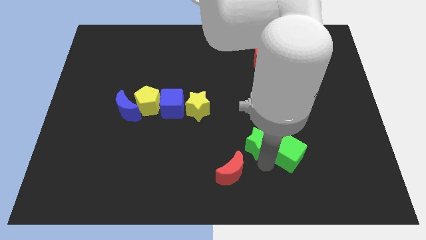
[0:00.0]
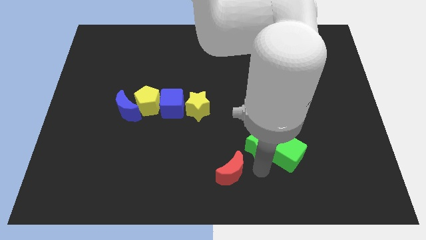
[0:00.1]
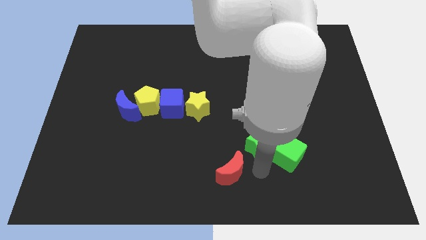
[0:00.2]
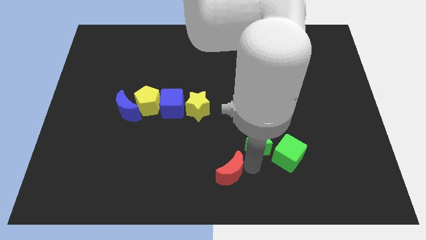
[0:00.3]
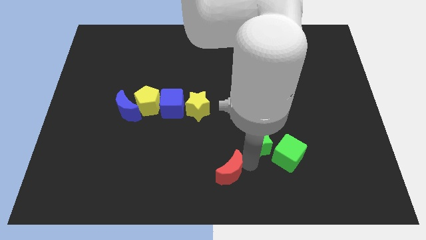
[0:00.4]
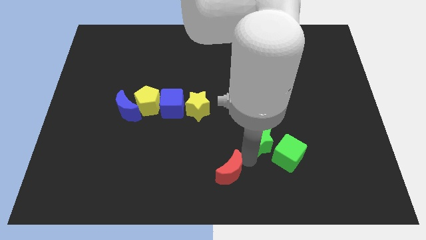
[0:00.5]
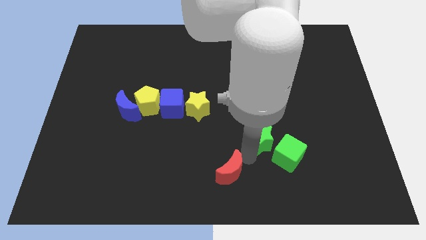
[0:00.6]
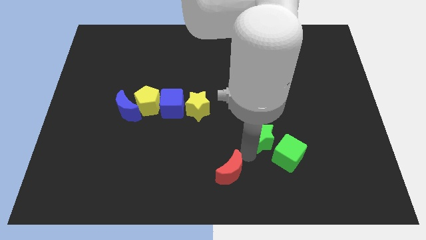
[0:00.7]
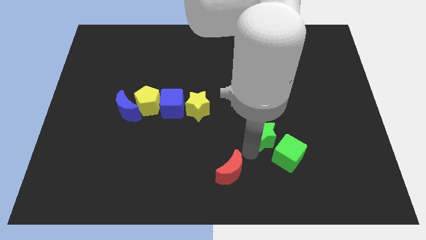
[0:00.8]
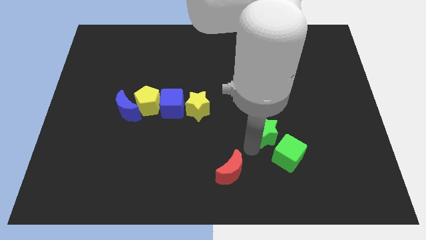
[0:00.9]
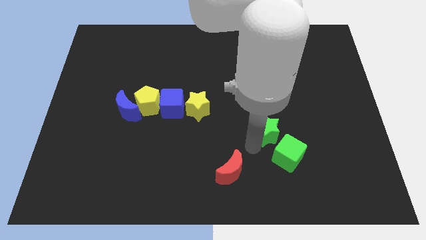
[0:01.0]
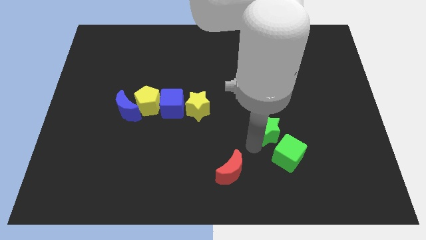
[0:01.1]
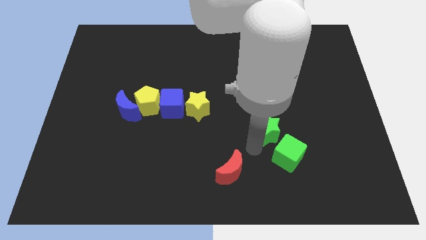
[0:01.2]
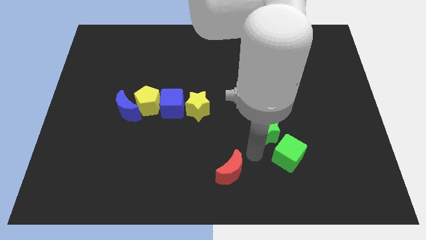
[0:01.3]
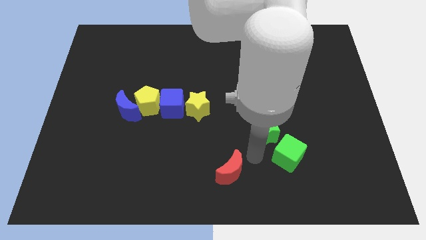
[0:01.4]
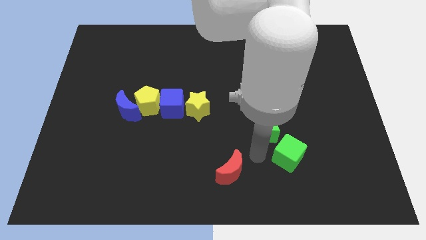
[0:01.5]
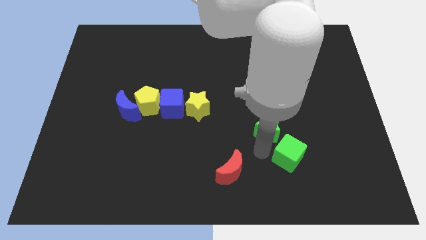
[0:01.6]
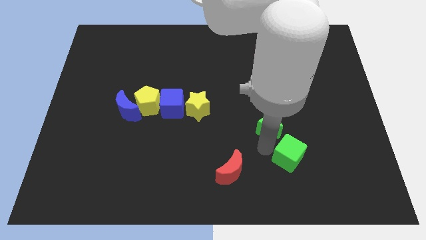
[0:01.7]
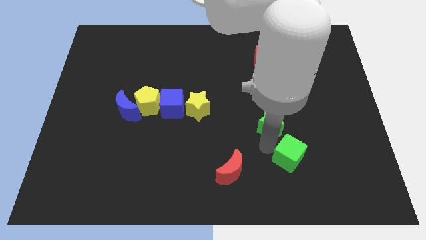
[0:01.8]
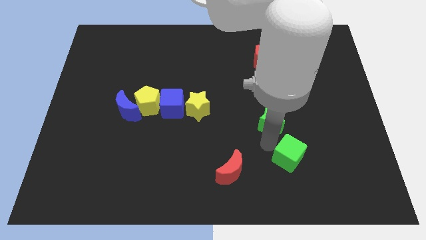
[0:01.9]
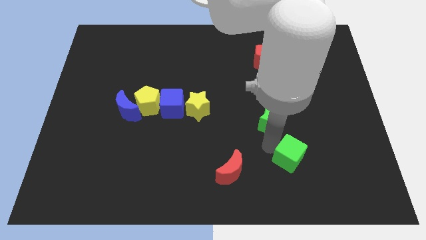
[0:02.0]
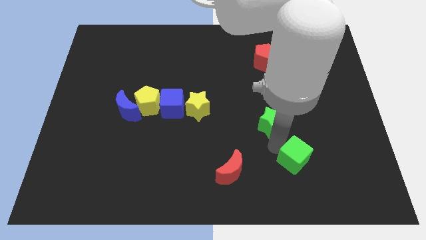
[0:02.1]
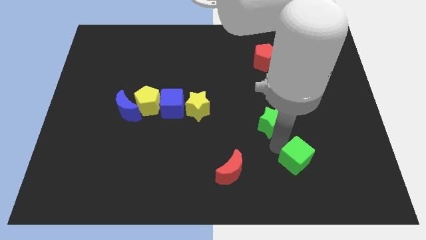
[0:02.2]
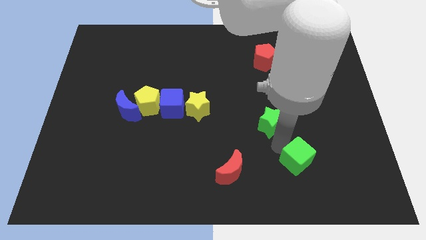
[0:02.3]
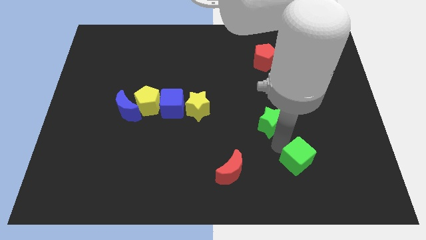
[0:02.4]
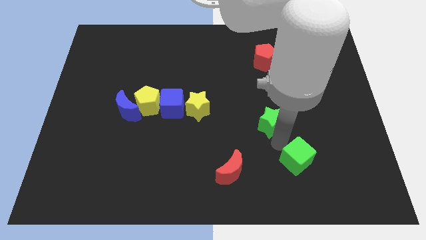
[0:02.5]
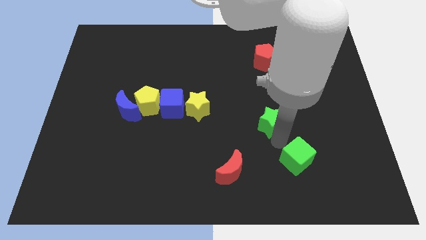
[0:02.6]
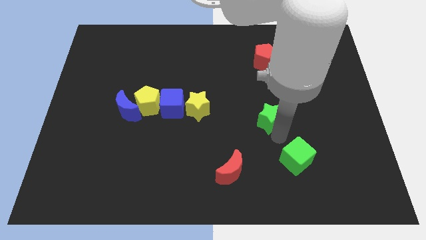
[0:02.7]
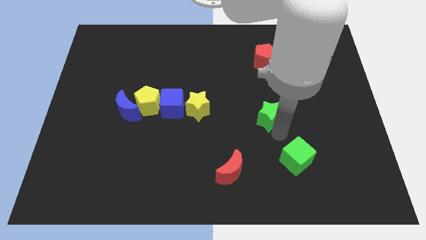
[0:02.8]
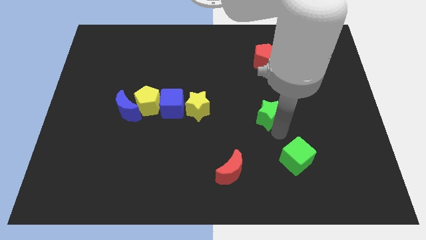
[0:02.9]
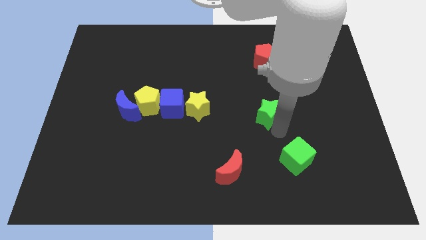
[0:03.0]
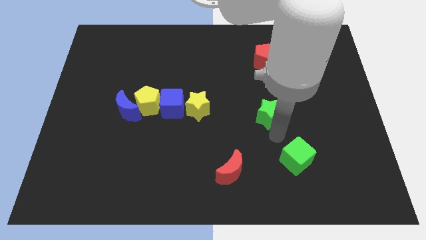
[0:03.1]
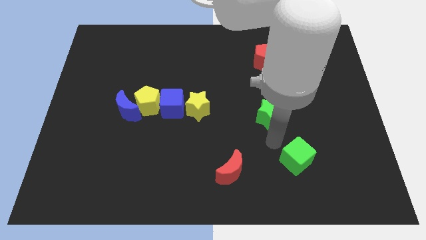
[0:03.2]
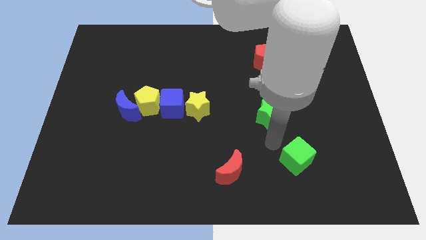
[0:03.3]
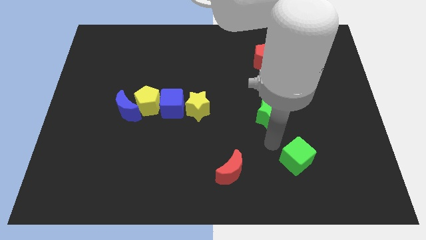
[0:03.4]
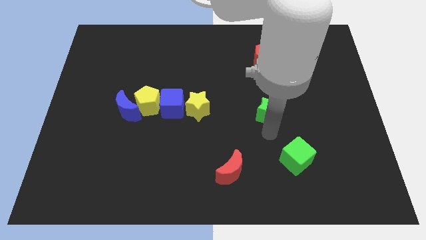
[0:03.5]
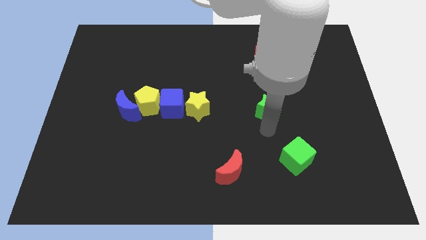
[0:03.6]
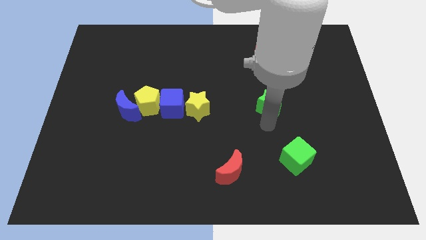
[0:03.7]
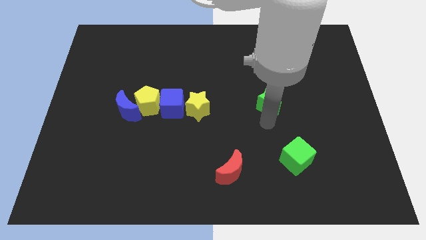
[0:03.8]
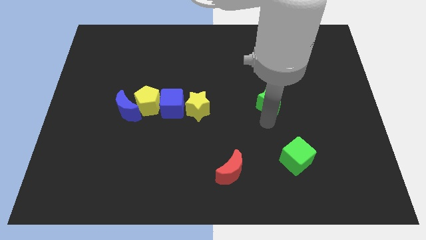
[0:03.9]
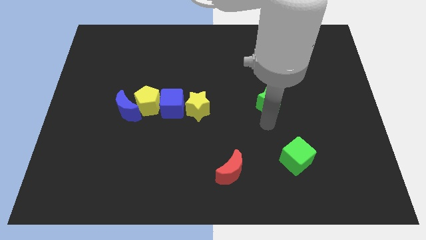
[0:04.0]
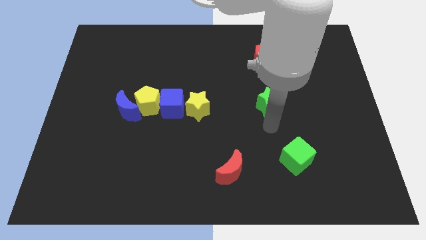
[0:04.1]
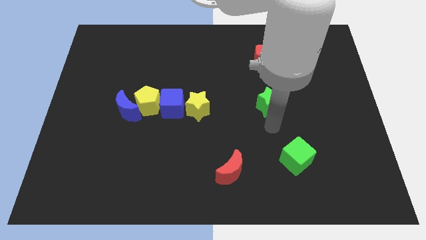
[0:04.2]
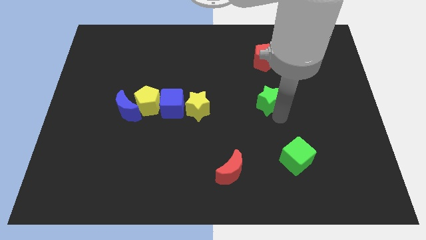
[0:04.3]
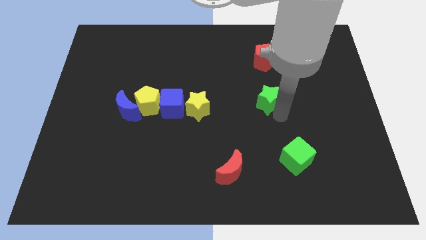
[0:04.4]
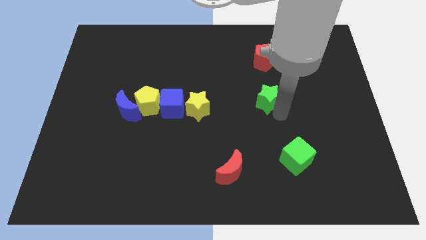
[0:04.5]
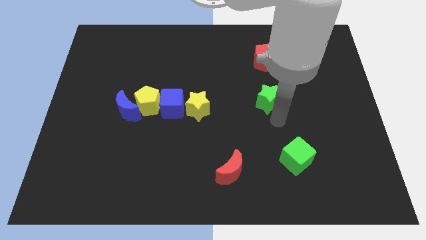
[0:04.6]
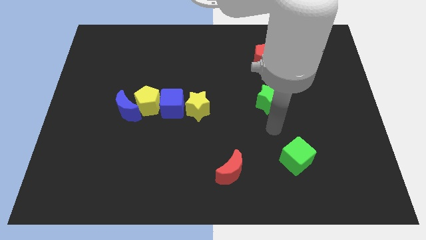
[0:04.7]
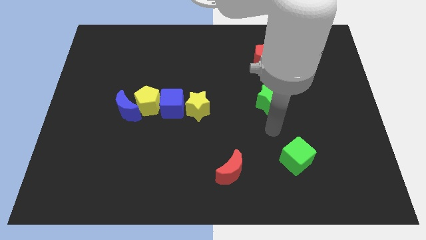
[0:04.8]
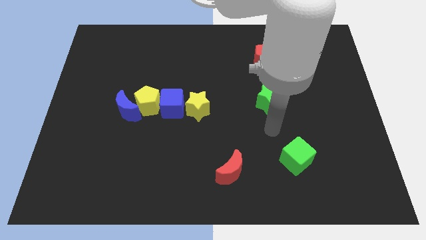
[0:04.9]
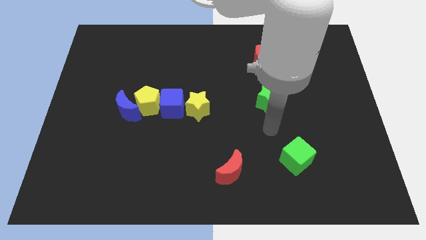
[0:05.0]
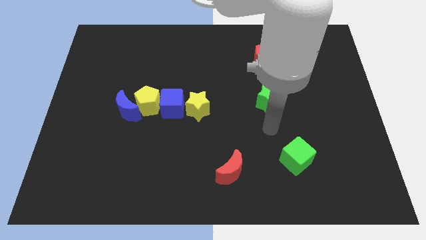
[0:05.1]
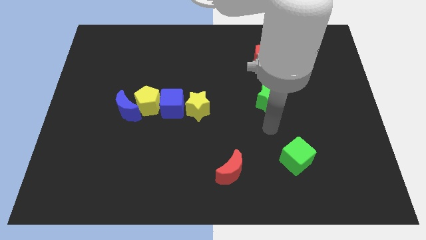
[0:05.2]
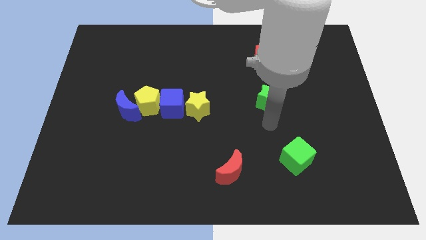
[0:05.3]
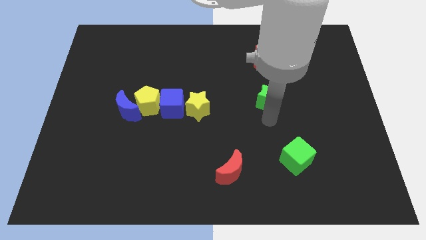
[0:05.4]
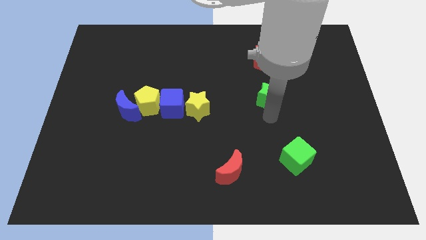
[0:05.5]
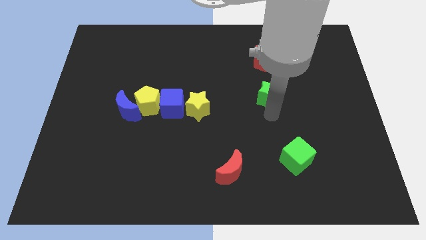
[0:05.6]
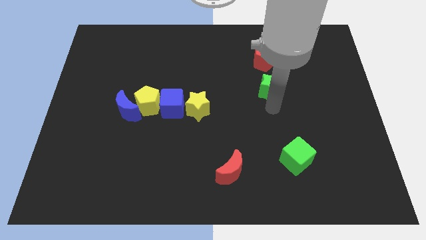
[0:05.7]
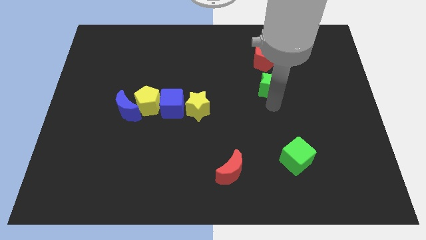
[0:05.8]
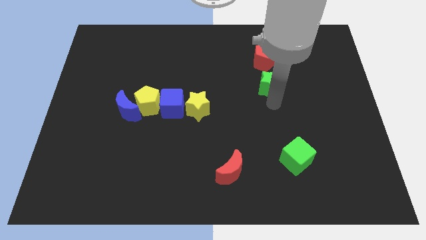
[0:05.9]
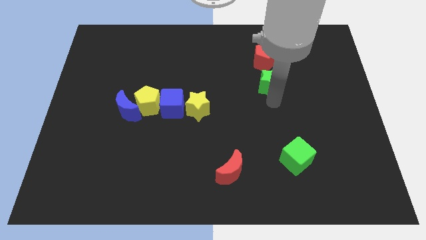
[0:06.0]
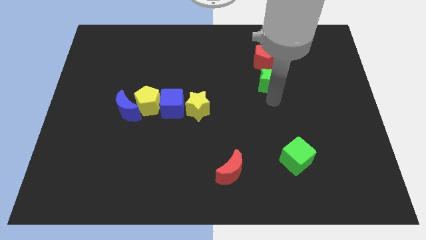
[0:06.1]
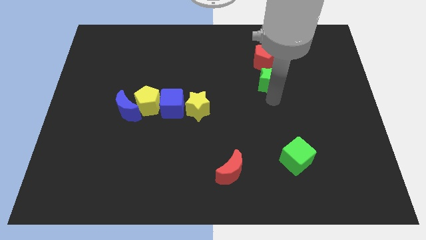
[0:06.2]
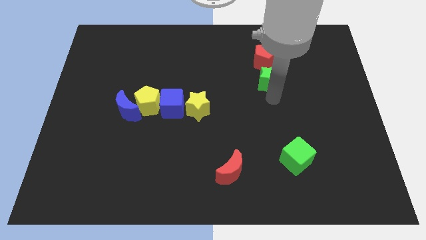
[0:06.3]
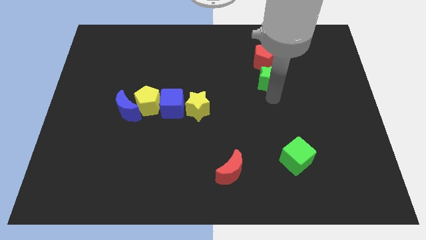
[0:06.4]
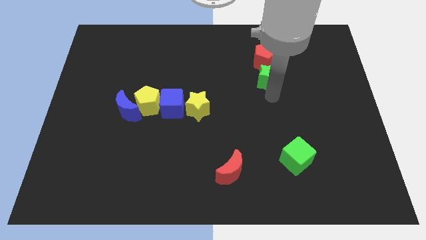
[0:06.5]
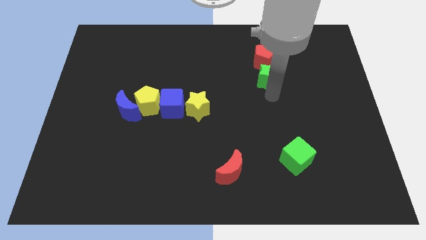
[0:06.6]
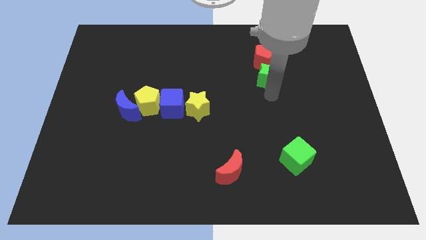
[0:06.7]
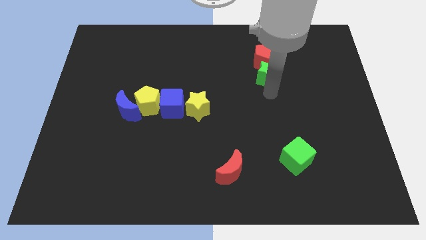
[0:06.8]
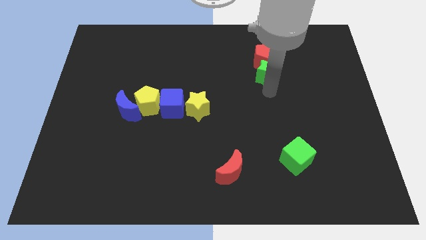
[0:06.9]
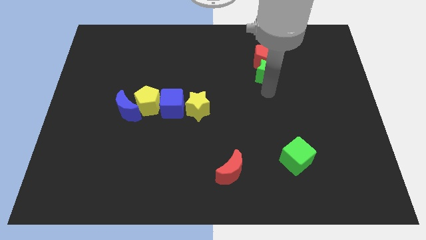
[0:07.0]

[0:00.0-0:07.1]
slide the green star into the bottom side of the red pentagon

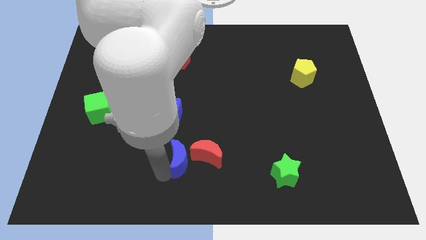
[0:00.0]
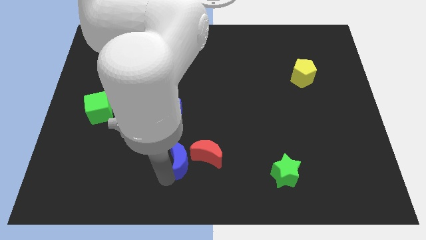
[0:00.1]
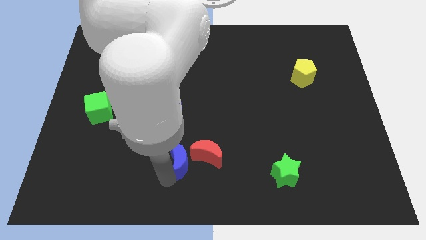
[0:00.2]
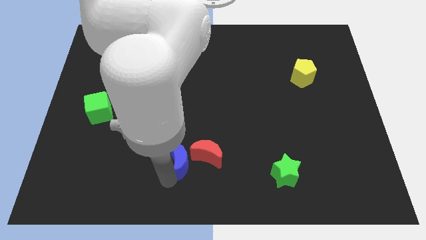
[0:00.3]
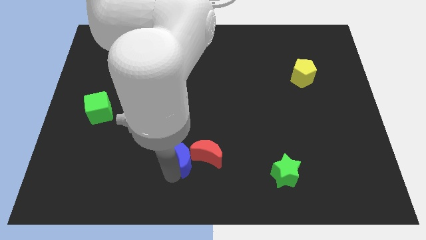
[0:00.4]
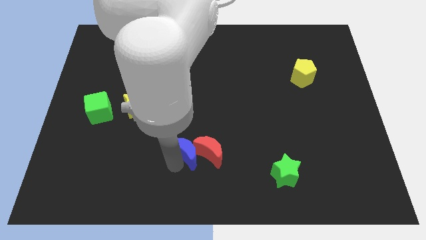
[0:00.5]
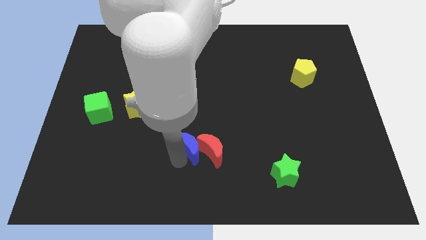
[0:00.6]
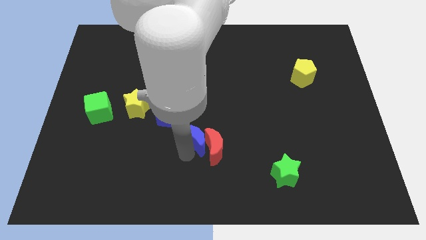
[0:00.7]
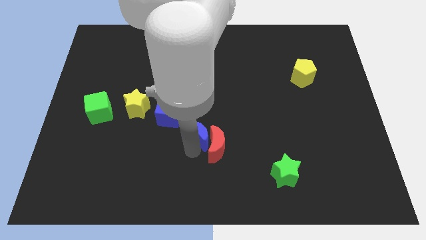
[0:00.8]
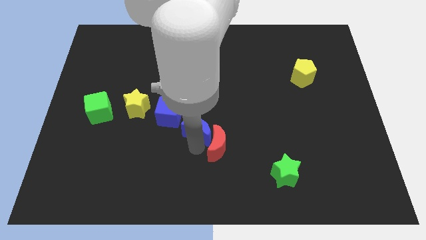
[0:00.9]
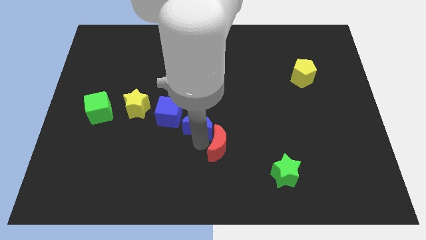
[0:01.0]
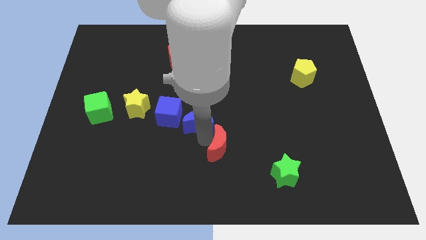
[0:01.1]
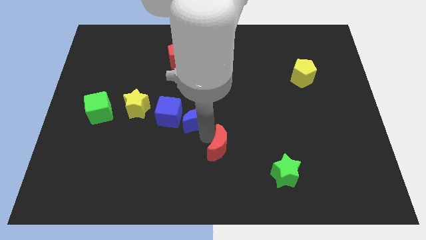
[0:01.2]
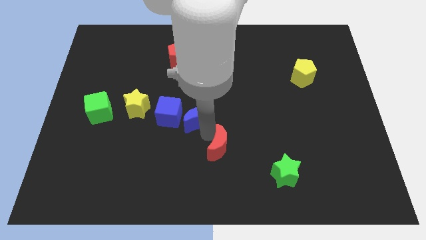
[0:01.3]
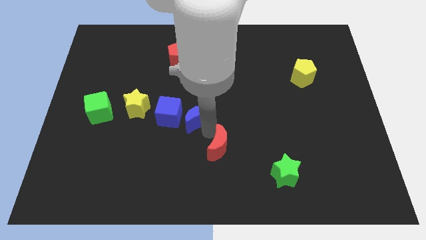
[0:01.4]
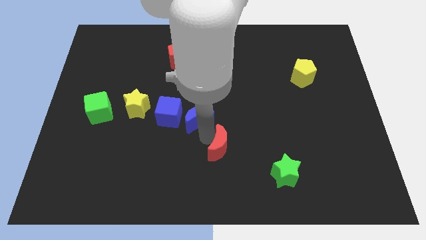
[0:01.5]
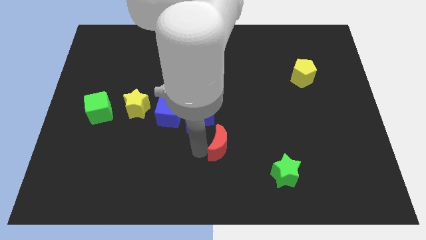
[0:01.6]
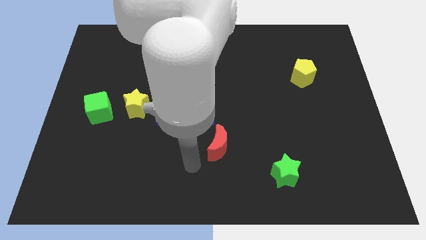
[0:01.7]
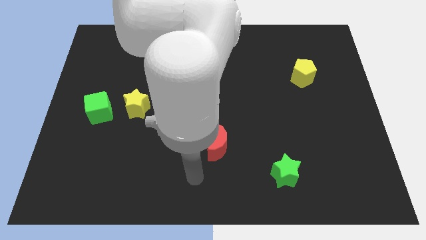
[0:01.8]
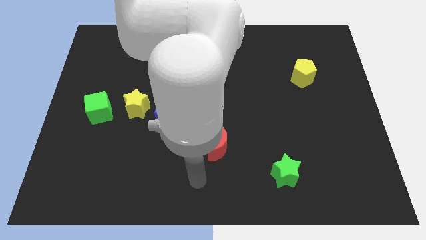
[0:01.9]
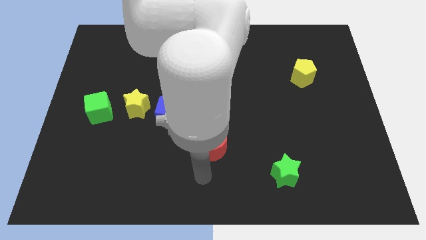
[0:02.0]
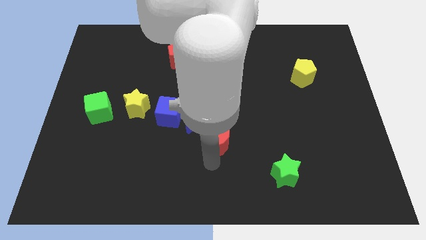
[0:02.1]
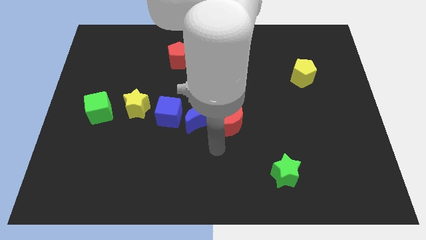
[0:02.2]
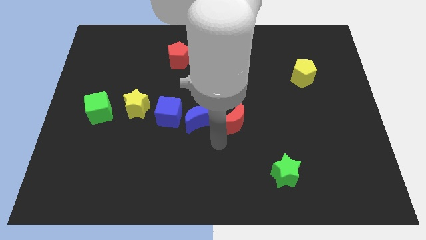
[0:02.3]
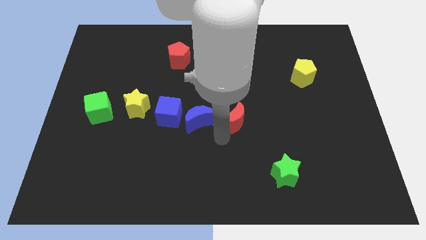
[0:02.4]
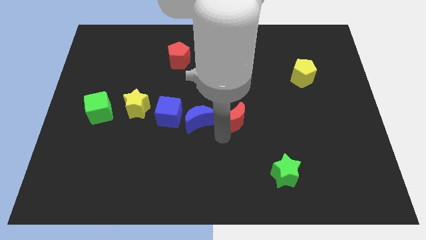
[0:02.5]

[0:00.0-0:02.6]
push blue crescent to the center
